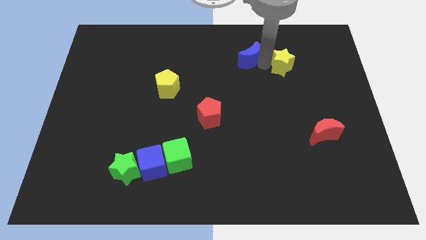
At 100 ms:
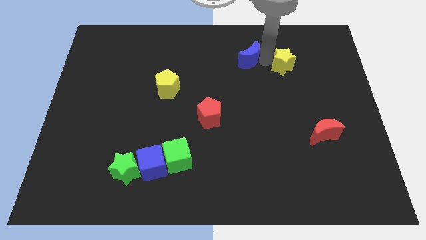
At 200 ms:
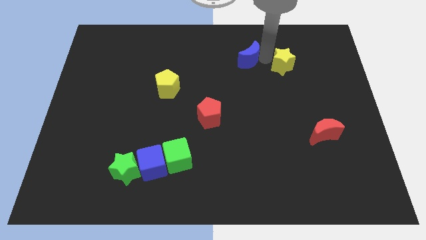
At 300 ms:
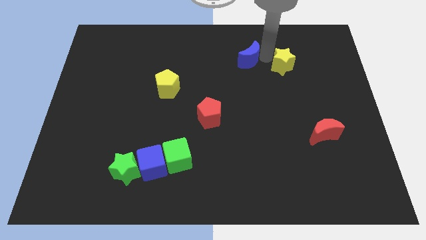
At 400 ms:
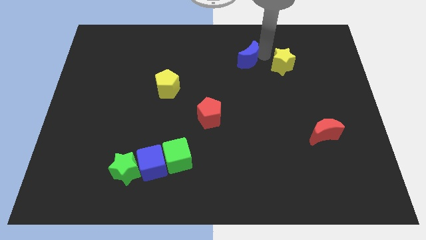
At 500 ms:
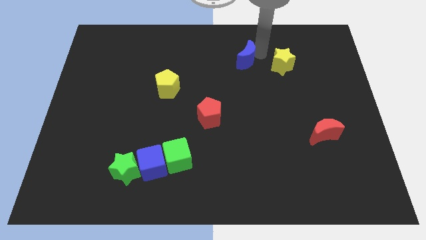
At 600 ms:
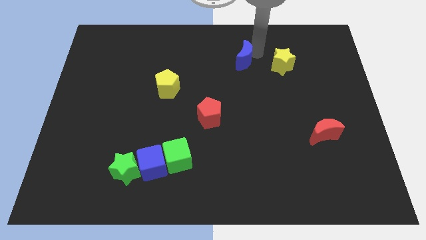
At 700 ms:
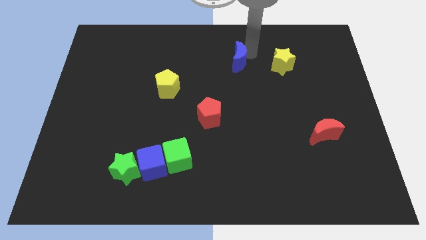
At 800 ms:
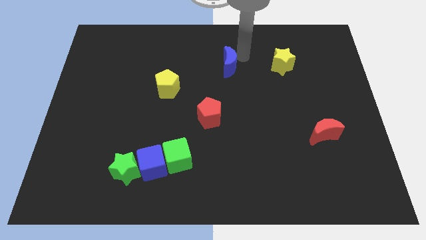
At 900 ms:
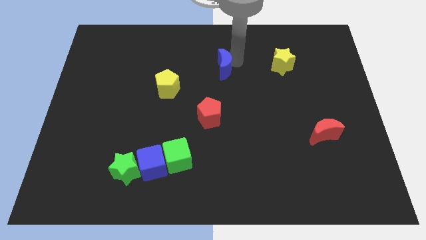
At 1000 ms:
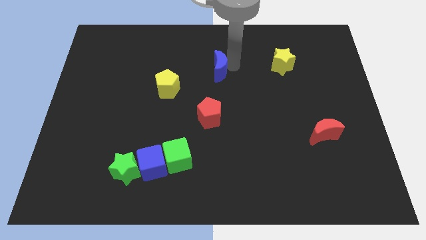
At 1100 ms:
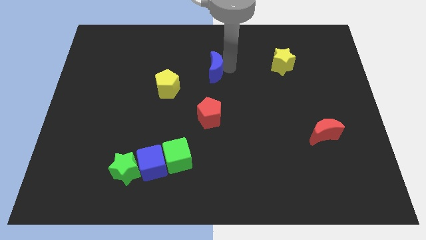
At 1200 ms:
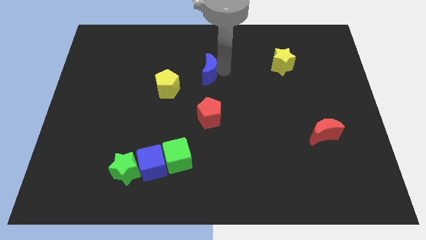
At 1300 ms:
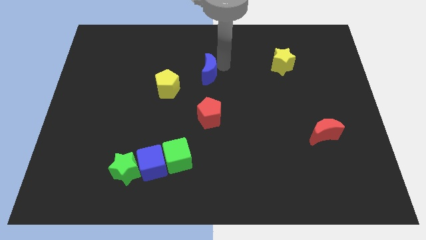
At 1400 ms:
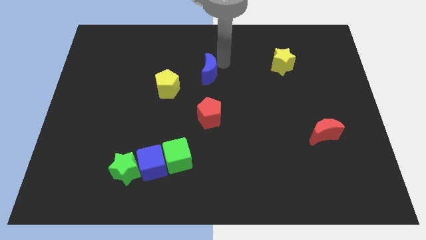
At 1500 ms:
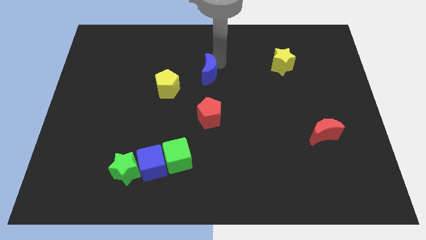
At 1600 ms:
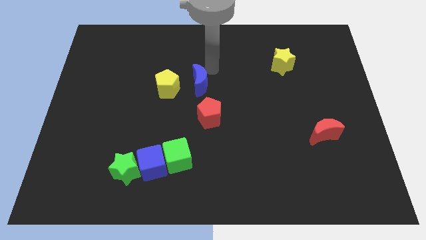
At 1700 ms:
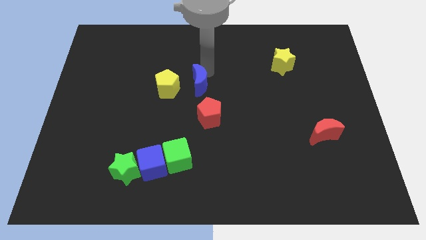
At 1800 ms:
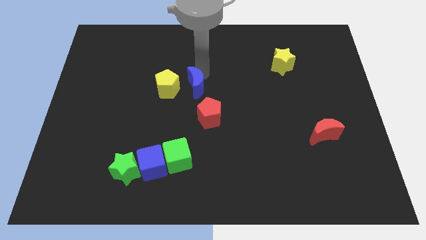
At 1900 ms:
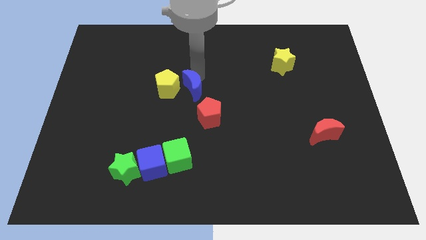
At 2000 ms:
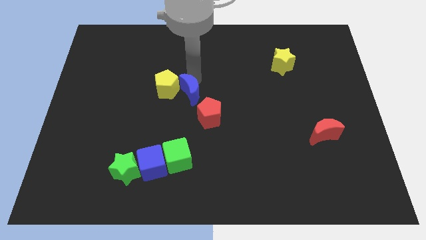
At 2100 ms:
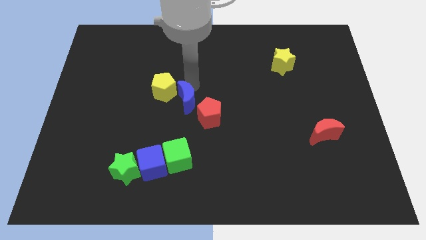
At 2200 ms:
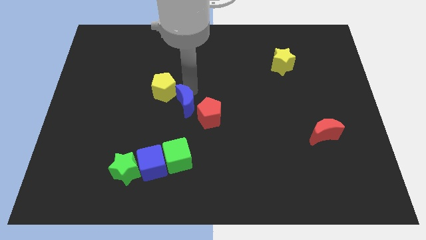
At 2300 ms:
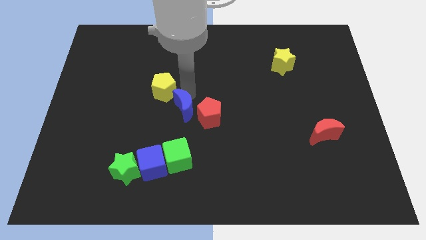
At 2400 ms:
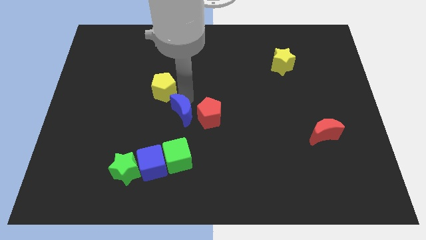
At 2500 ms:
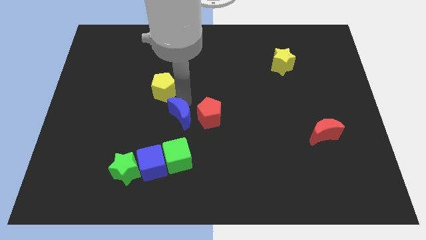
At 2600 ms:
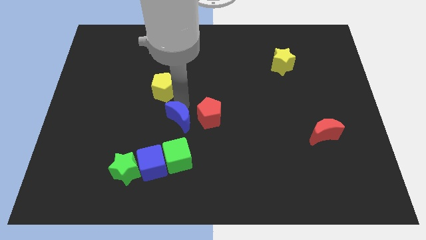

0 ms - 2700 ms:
place the blue moon towards the left side of red pentagon

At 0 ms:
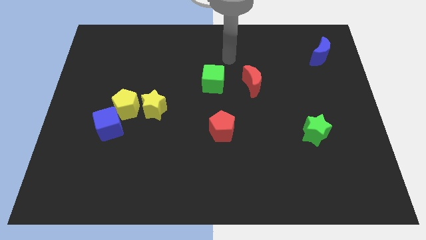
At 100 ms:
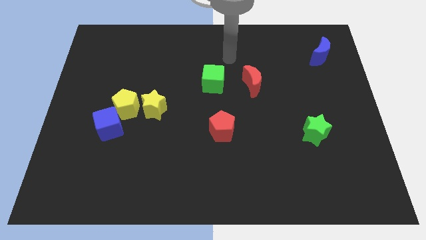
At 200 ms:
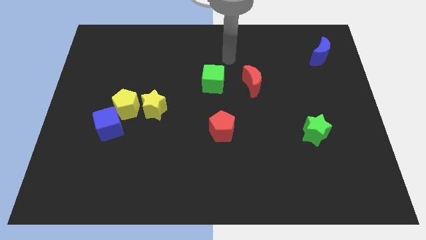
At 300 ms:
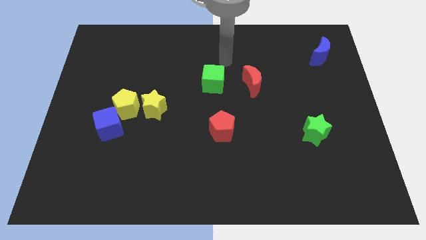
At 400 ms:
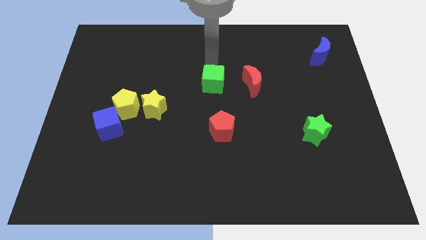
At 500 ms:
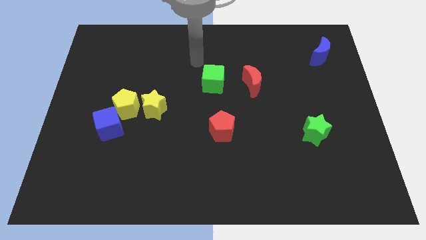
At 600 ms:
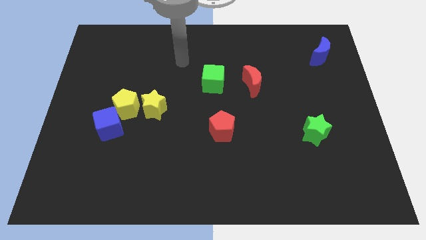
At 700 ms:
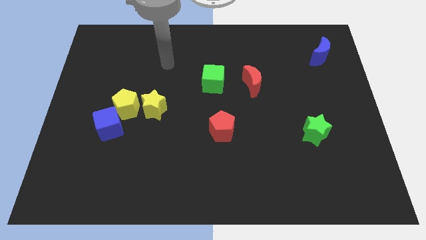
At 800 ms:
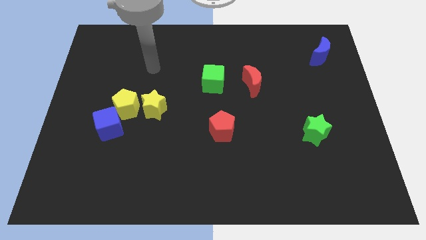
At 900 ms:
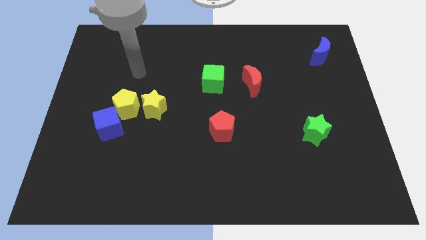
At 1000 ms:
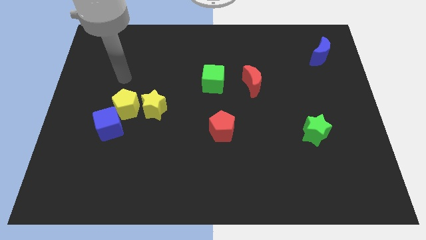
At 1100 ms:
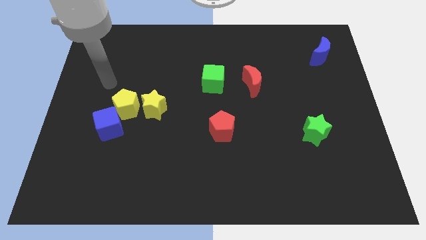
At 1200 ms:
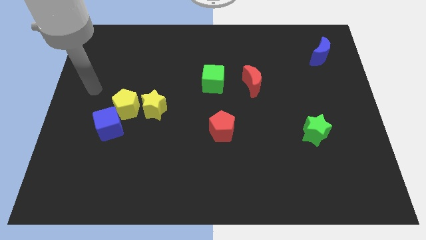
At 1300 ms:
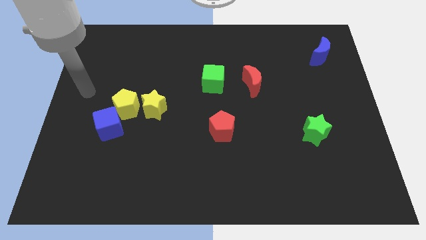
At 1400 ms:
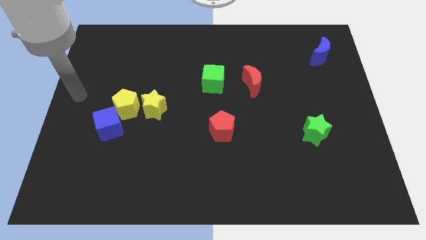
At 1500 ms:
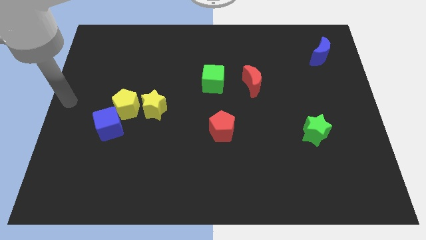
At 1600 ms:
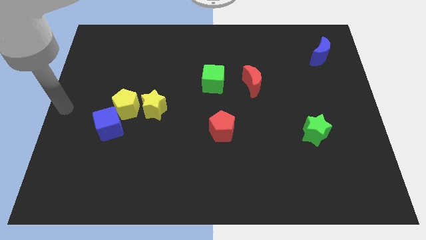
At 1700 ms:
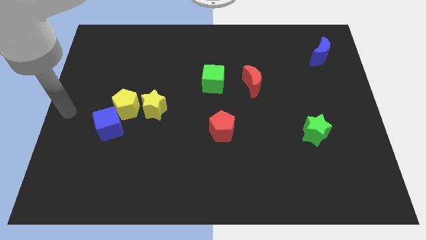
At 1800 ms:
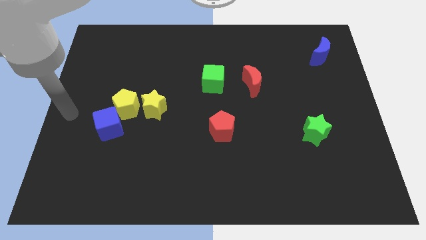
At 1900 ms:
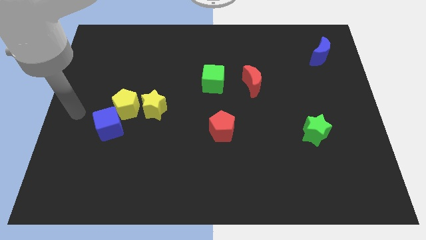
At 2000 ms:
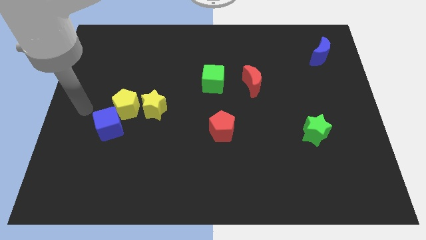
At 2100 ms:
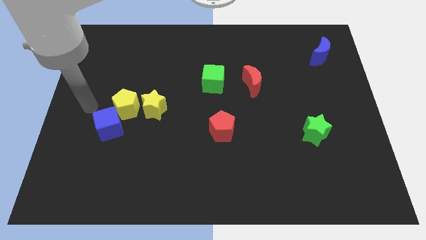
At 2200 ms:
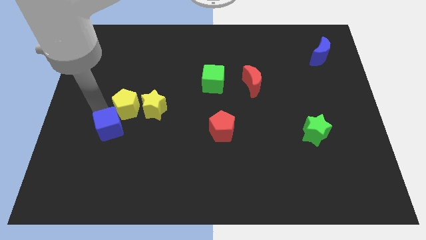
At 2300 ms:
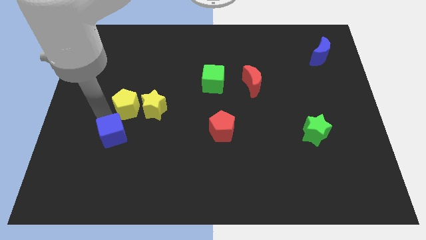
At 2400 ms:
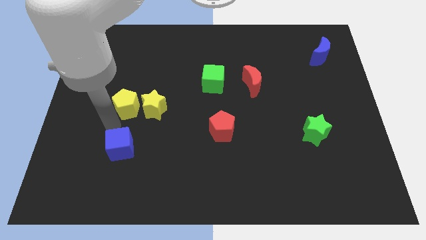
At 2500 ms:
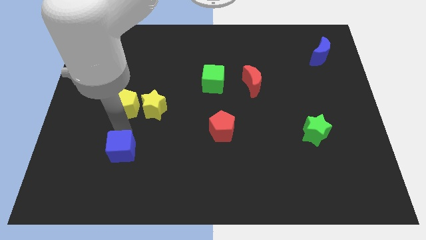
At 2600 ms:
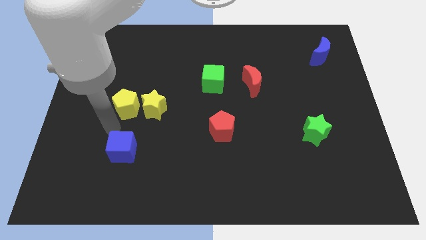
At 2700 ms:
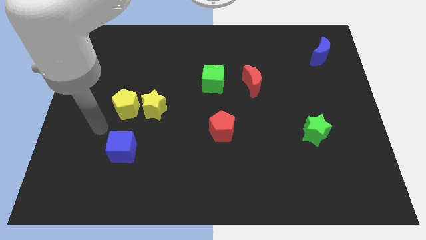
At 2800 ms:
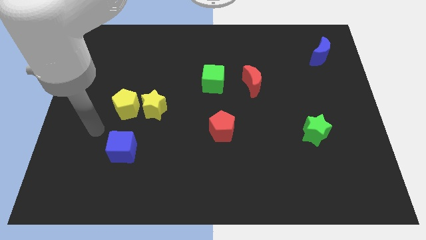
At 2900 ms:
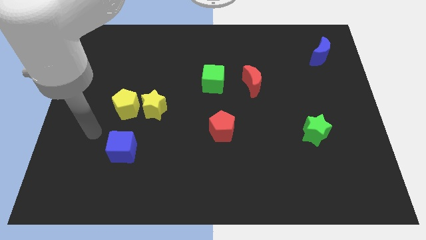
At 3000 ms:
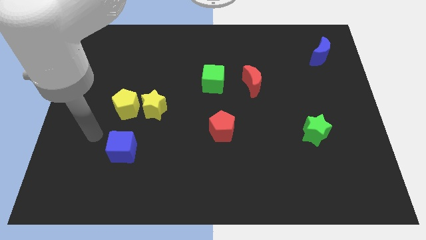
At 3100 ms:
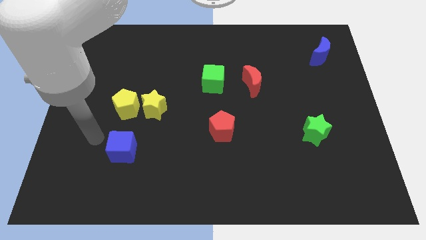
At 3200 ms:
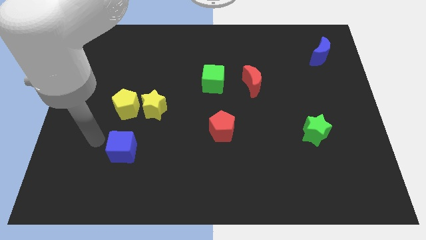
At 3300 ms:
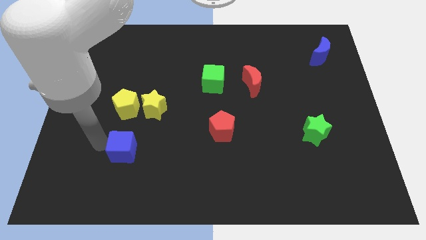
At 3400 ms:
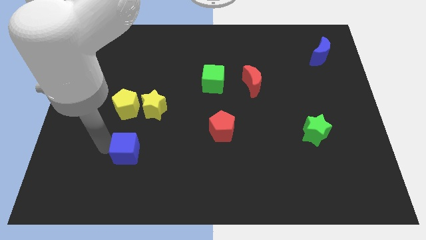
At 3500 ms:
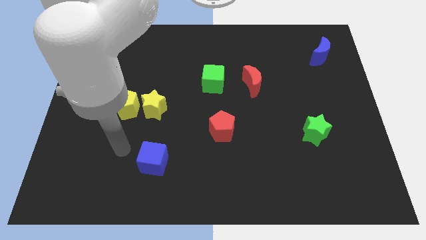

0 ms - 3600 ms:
move the blue cube to the bottom side of the yellow star

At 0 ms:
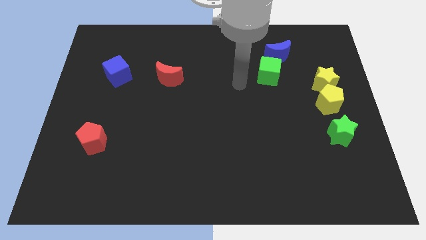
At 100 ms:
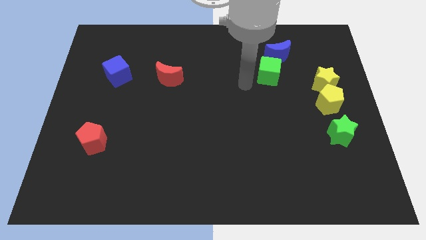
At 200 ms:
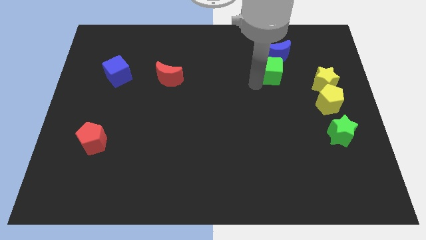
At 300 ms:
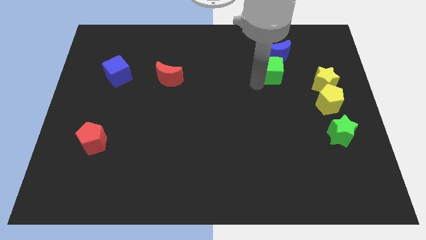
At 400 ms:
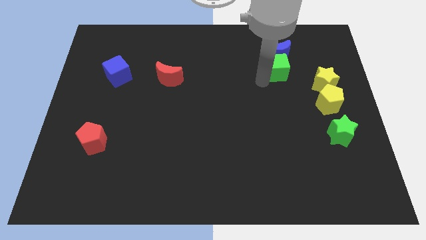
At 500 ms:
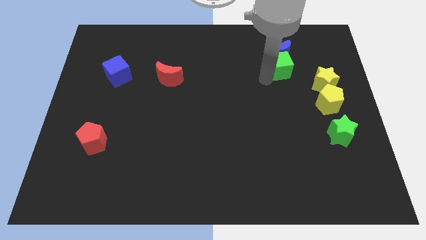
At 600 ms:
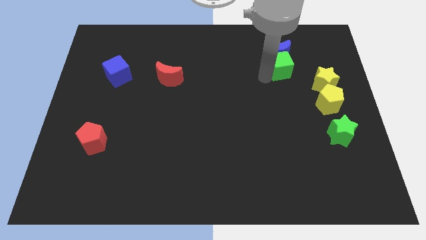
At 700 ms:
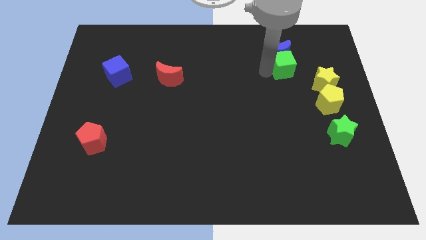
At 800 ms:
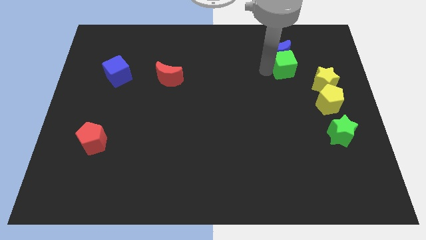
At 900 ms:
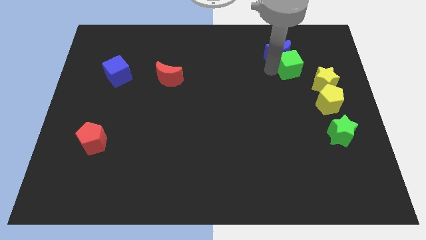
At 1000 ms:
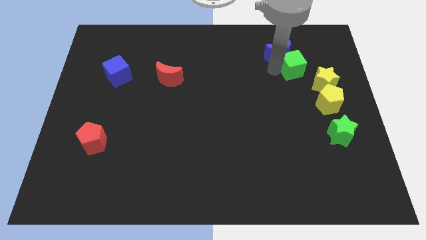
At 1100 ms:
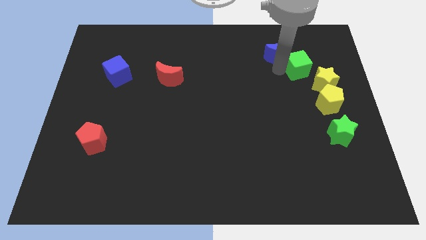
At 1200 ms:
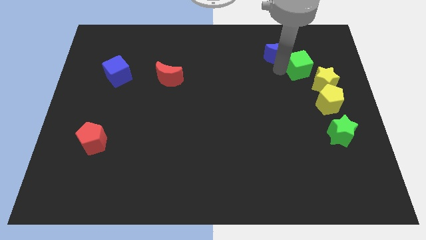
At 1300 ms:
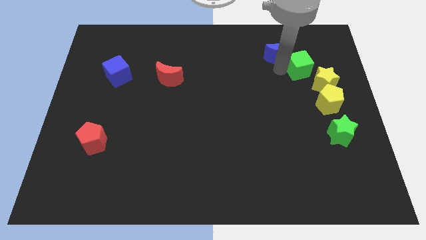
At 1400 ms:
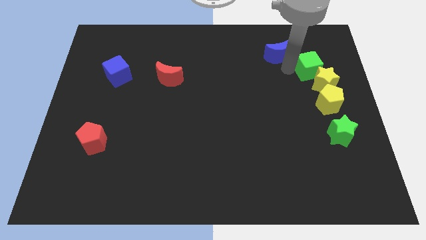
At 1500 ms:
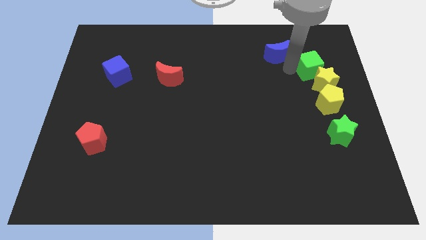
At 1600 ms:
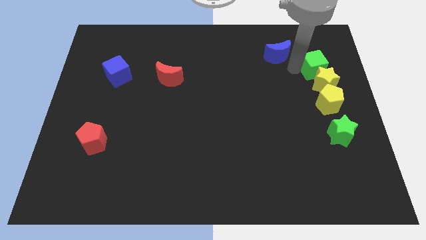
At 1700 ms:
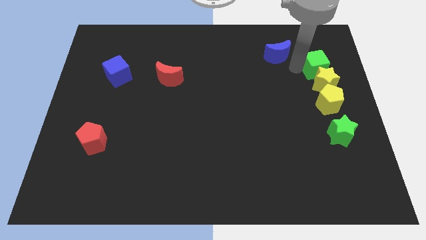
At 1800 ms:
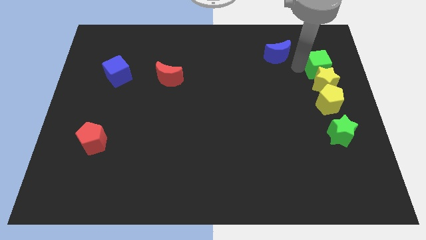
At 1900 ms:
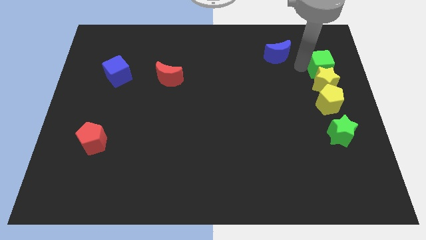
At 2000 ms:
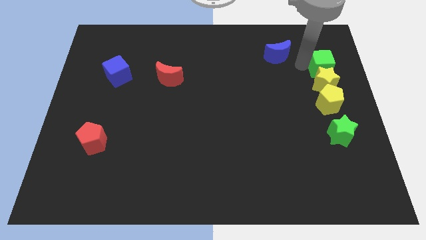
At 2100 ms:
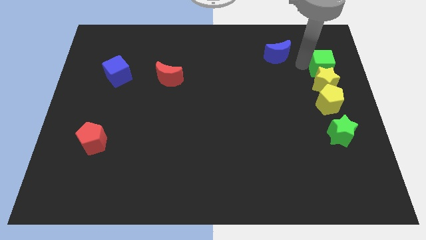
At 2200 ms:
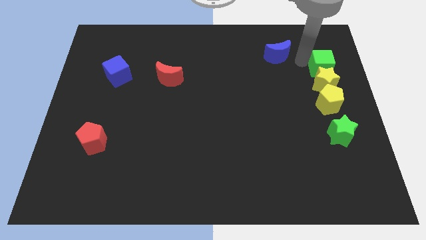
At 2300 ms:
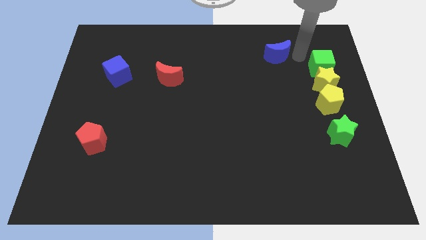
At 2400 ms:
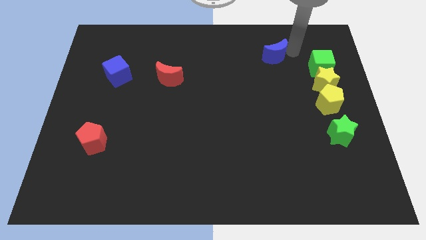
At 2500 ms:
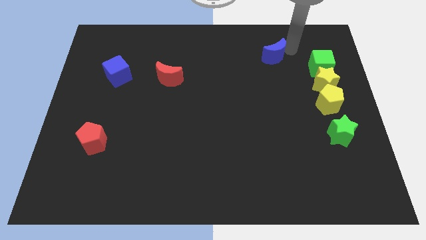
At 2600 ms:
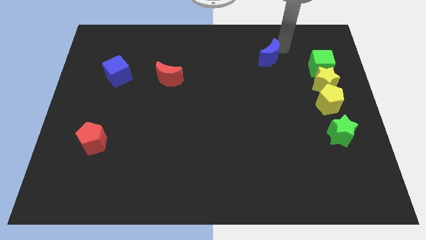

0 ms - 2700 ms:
place green cube on top of yellow star

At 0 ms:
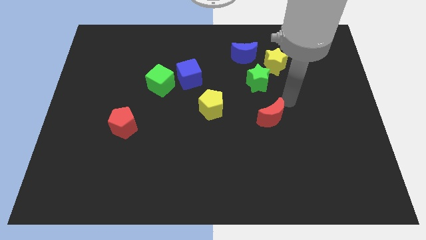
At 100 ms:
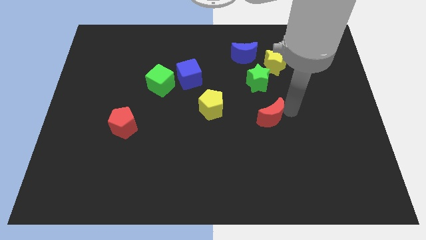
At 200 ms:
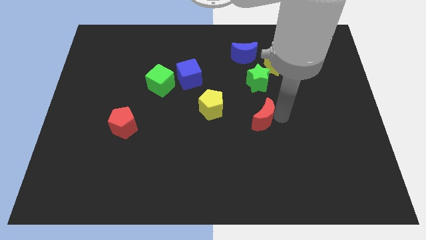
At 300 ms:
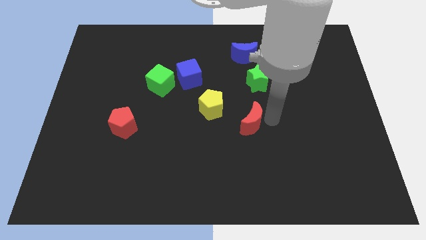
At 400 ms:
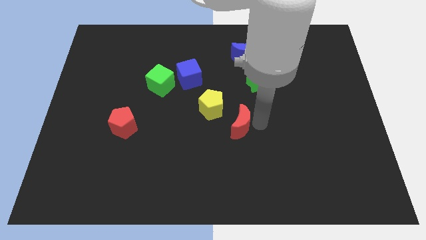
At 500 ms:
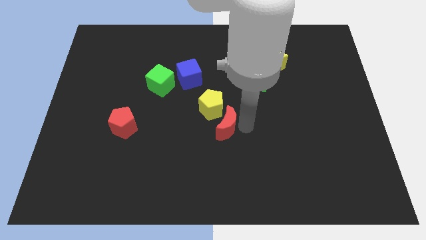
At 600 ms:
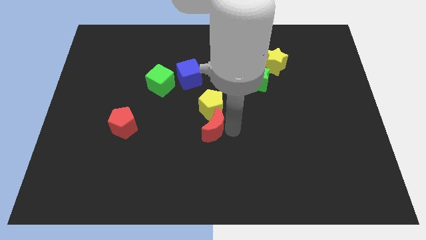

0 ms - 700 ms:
push red moon to the bottom of yellow pentagon
